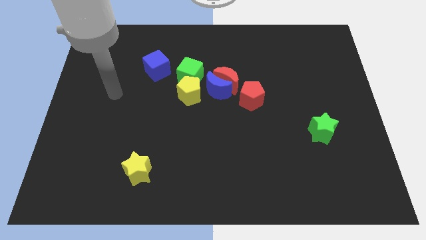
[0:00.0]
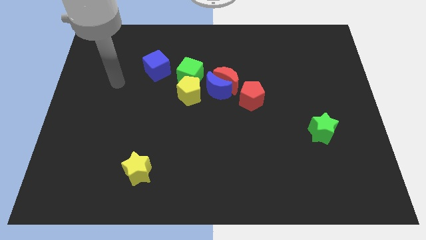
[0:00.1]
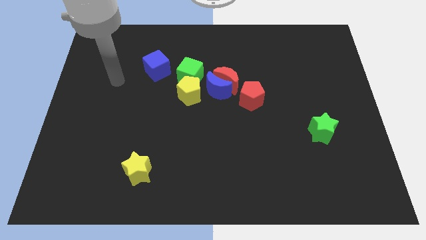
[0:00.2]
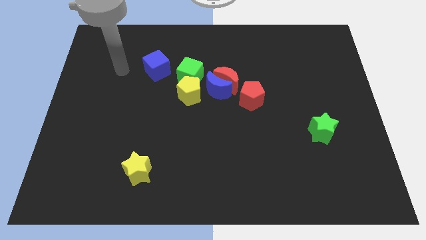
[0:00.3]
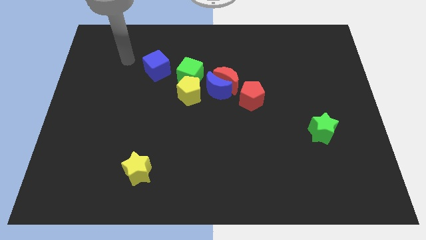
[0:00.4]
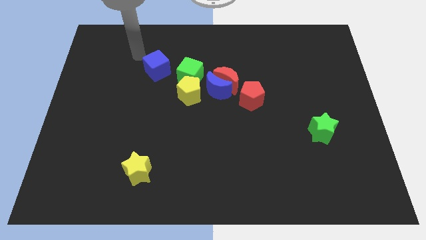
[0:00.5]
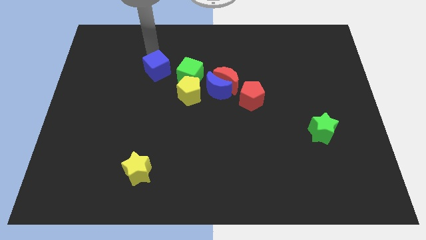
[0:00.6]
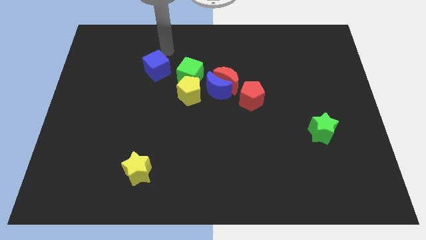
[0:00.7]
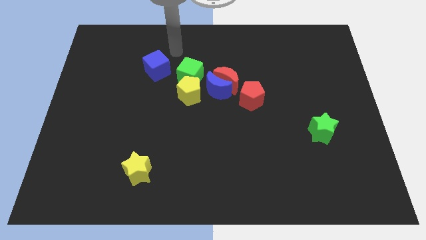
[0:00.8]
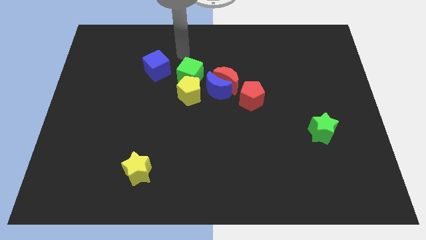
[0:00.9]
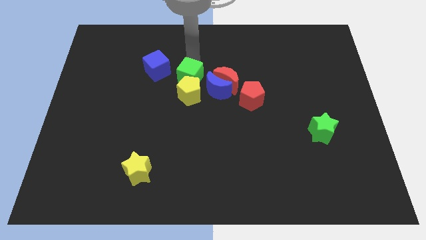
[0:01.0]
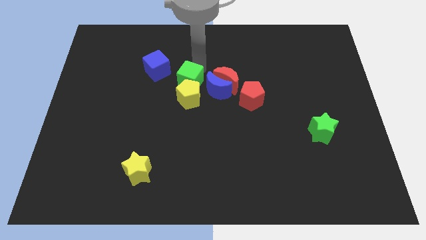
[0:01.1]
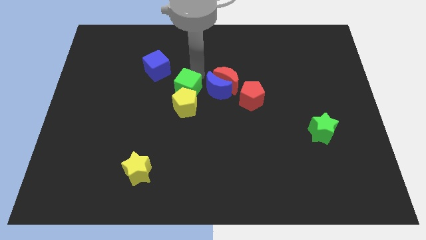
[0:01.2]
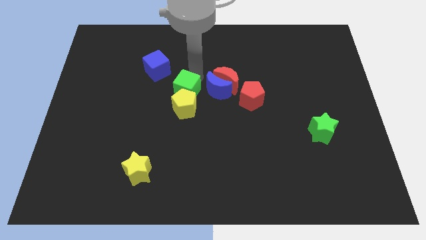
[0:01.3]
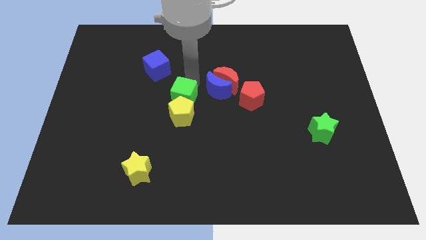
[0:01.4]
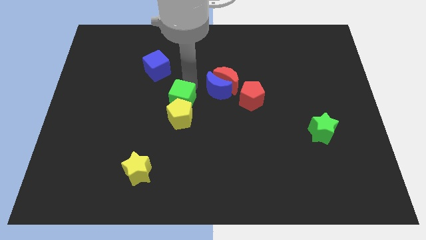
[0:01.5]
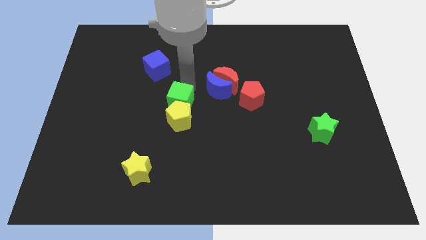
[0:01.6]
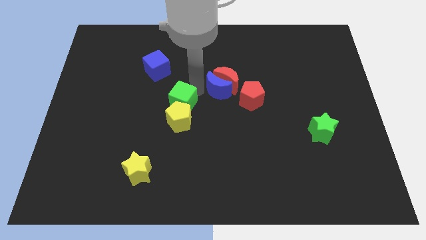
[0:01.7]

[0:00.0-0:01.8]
push green cube and the yellow pentagon slightly to the down

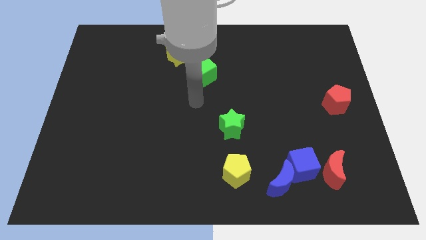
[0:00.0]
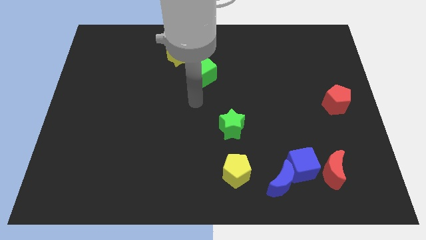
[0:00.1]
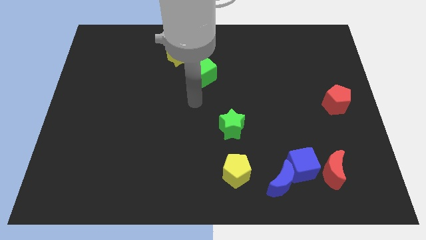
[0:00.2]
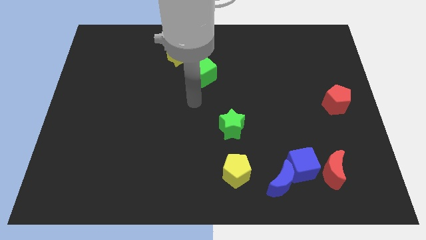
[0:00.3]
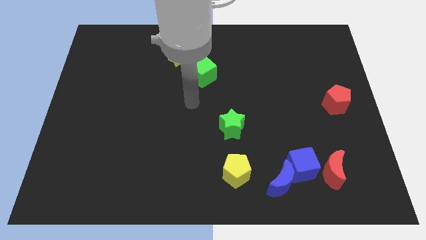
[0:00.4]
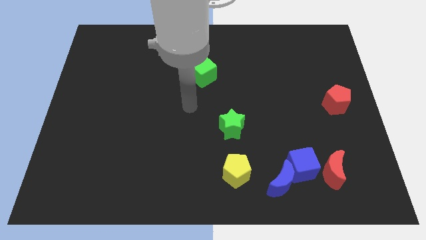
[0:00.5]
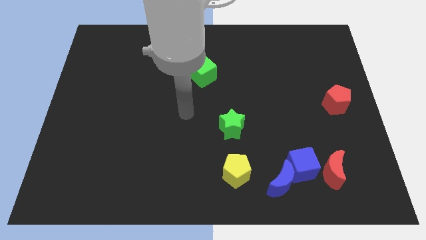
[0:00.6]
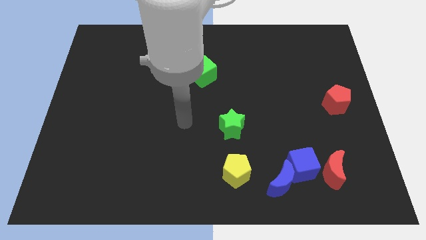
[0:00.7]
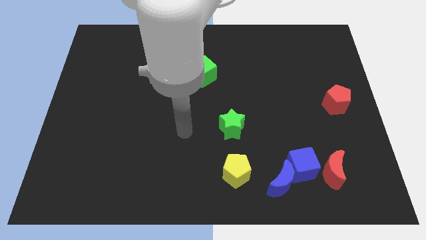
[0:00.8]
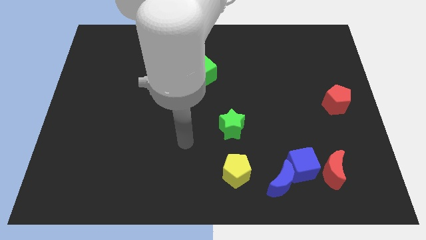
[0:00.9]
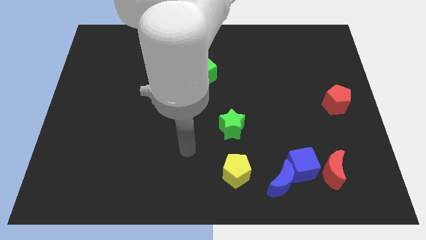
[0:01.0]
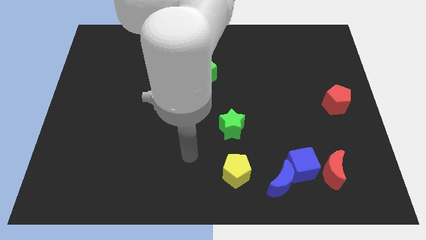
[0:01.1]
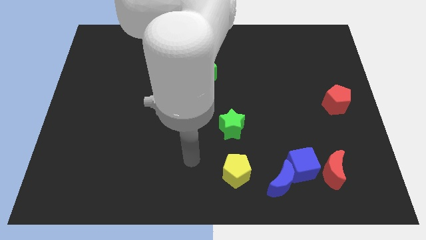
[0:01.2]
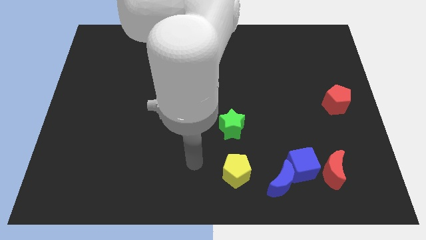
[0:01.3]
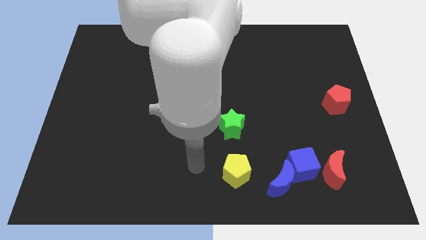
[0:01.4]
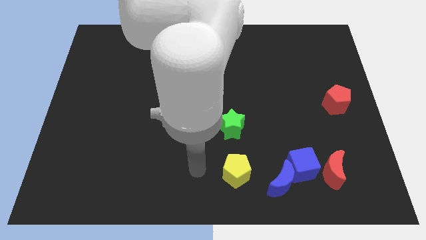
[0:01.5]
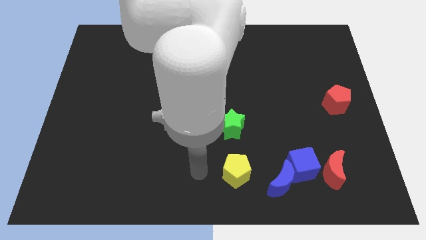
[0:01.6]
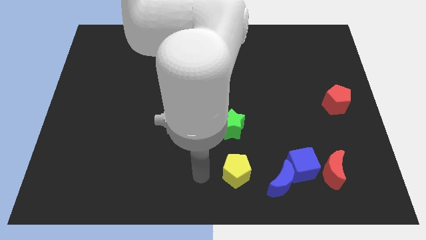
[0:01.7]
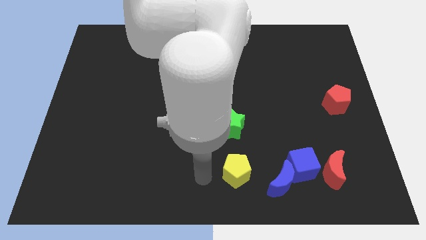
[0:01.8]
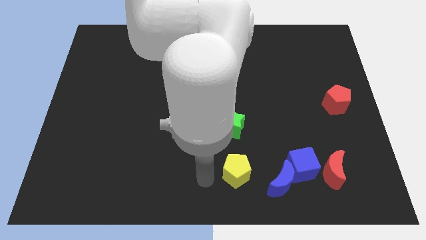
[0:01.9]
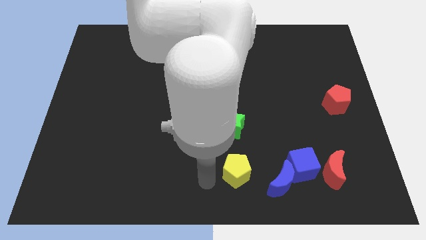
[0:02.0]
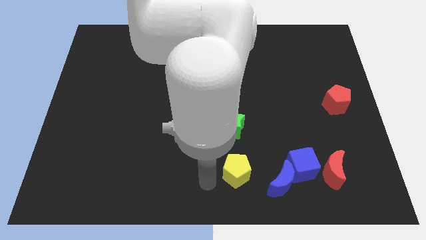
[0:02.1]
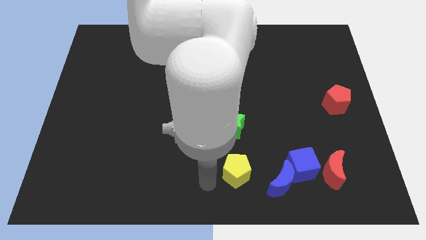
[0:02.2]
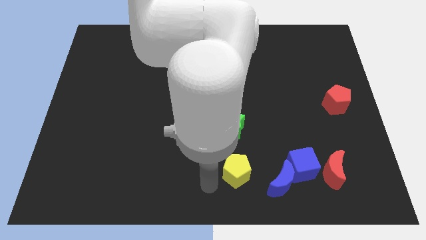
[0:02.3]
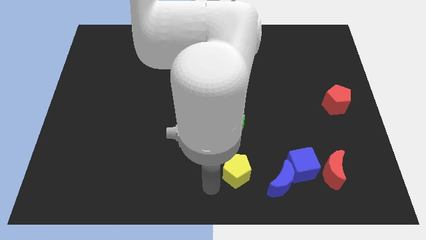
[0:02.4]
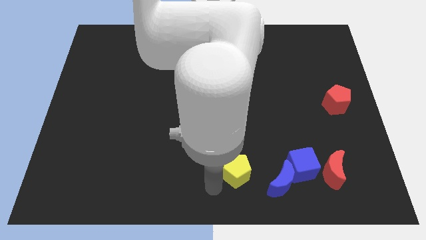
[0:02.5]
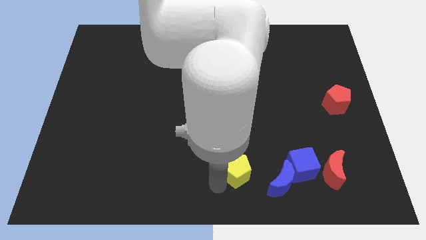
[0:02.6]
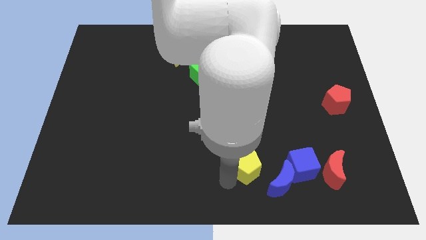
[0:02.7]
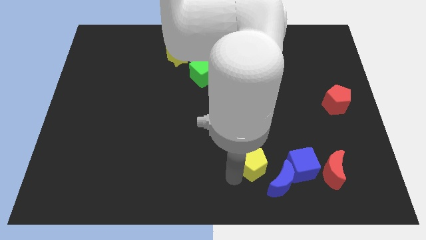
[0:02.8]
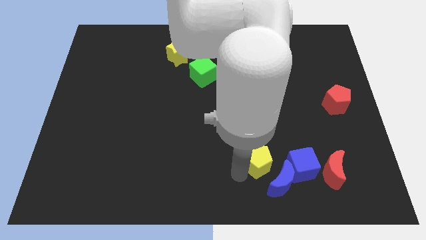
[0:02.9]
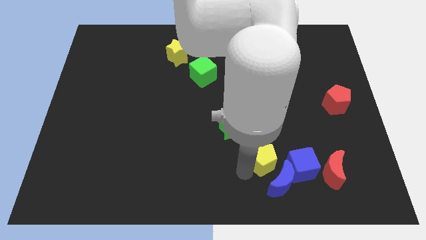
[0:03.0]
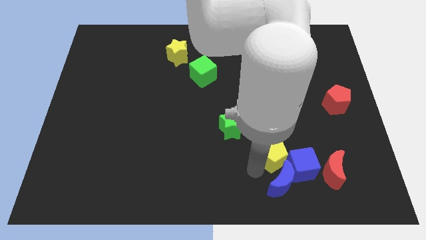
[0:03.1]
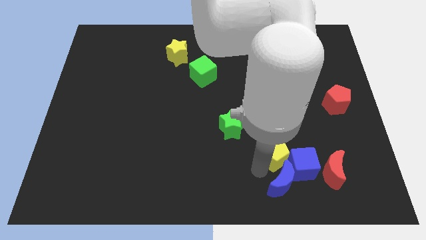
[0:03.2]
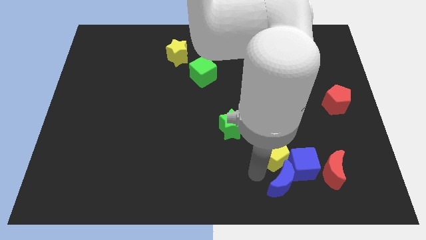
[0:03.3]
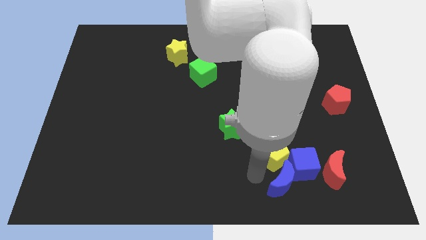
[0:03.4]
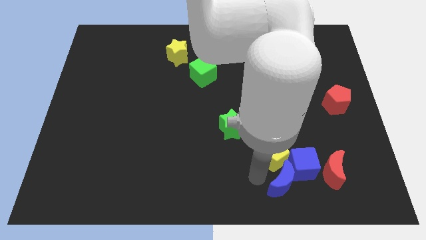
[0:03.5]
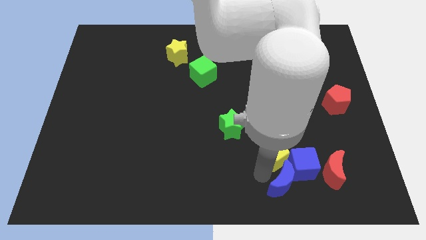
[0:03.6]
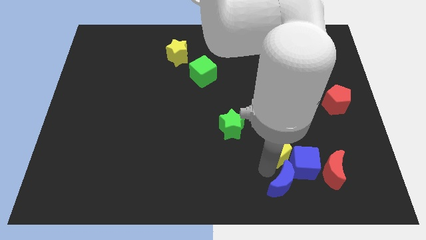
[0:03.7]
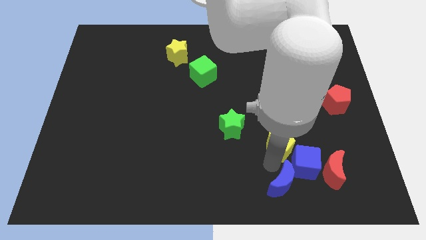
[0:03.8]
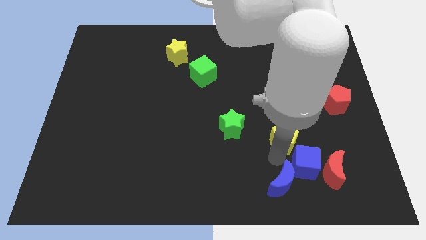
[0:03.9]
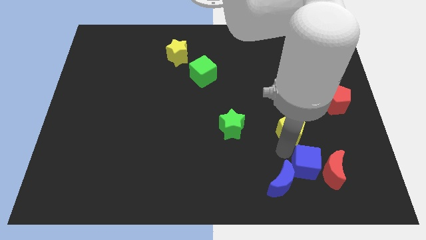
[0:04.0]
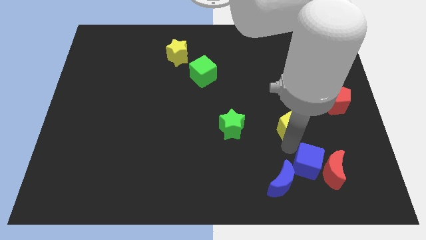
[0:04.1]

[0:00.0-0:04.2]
move the yellow pentagon slightly towards right top

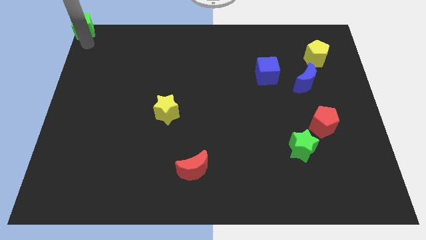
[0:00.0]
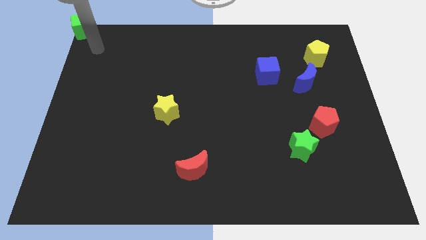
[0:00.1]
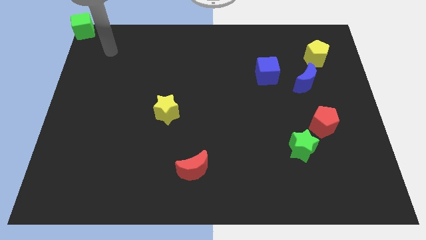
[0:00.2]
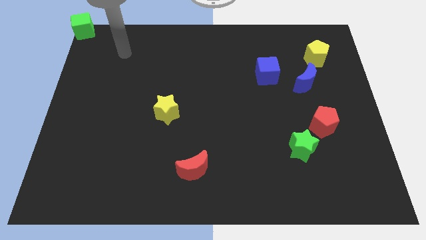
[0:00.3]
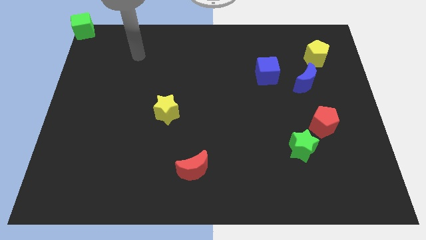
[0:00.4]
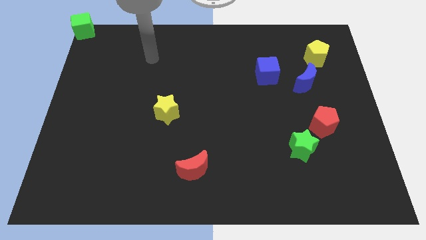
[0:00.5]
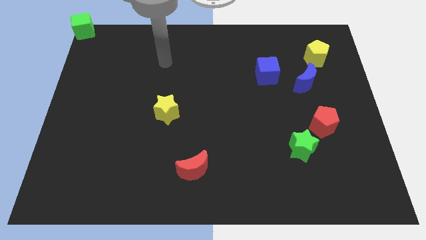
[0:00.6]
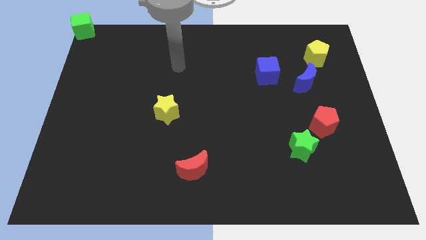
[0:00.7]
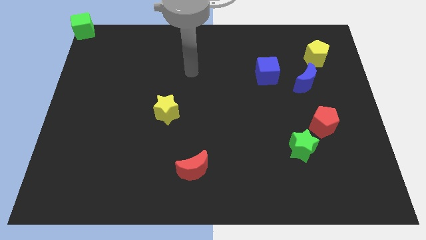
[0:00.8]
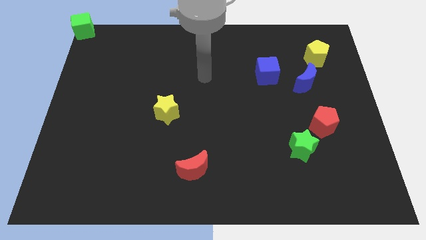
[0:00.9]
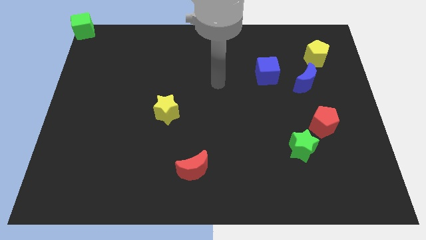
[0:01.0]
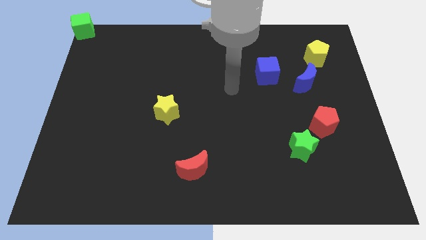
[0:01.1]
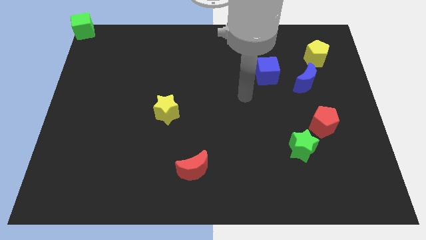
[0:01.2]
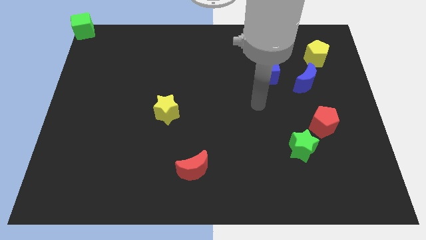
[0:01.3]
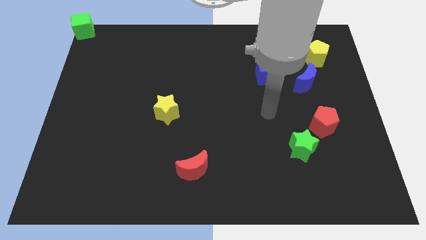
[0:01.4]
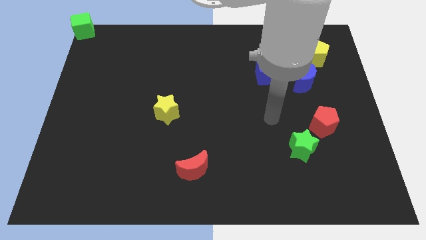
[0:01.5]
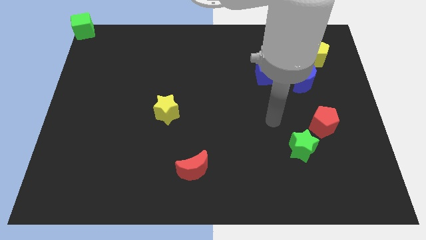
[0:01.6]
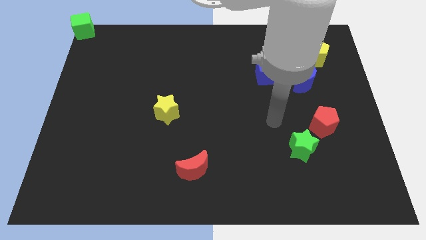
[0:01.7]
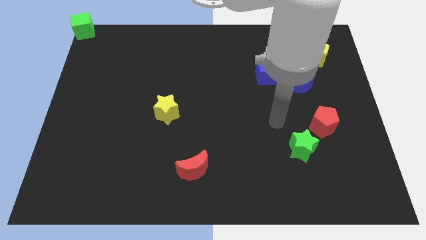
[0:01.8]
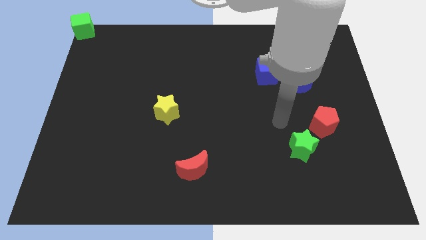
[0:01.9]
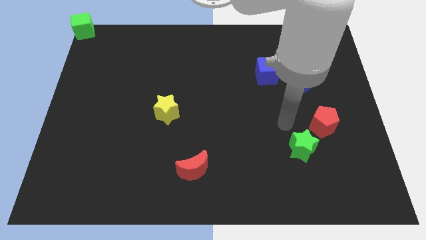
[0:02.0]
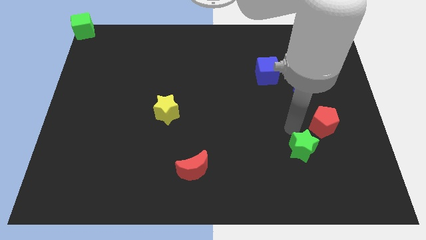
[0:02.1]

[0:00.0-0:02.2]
move your arm towards the bottom right of the board

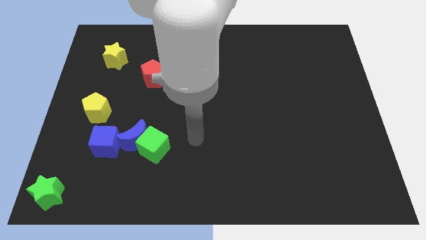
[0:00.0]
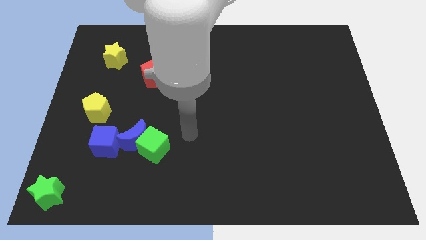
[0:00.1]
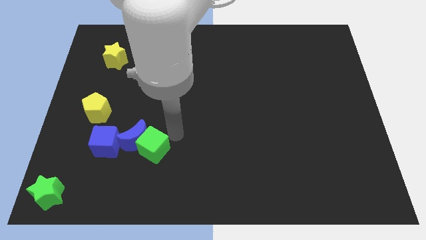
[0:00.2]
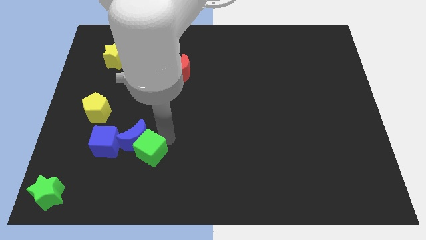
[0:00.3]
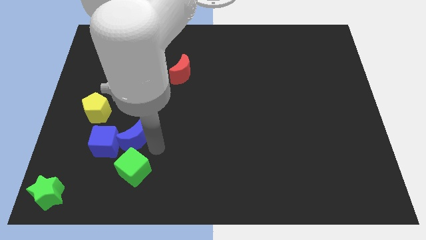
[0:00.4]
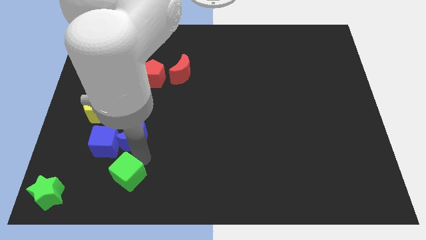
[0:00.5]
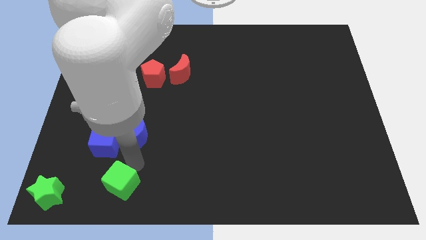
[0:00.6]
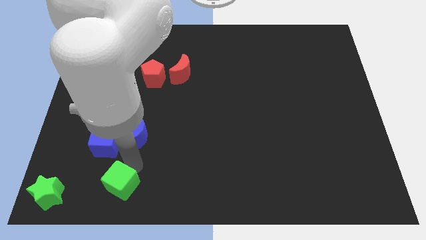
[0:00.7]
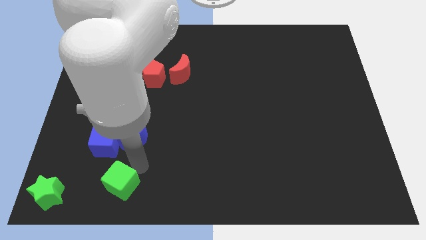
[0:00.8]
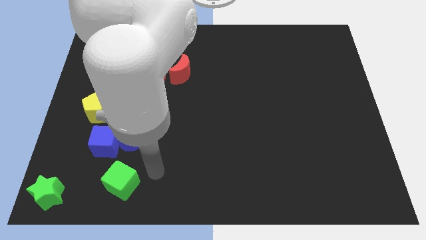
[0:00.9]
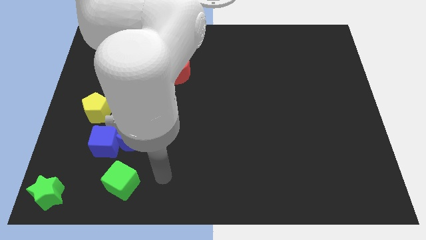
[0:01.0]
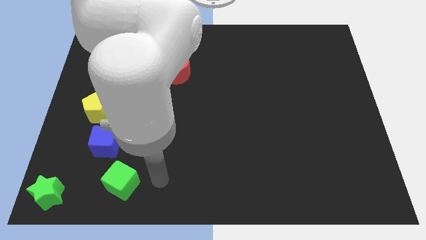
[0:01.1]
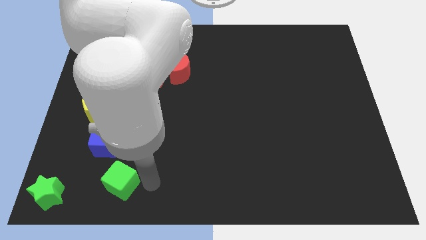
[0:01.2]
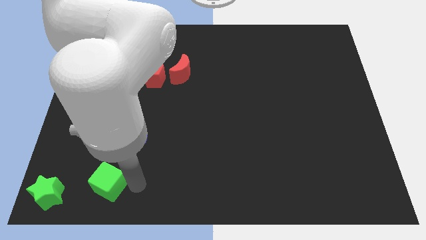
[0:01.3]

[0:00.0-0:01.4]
place the green cube below the blue cube
